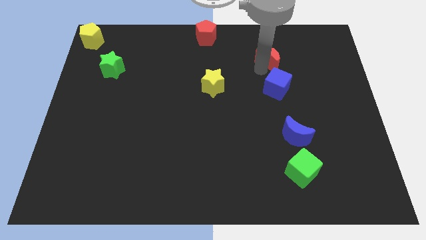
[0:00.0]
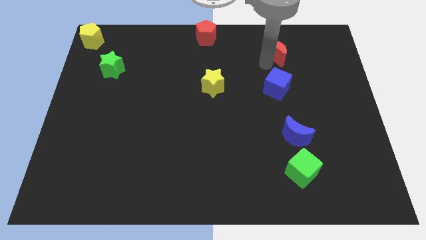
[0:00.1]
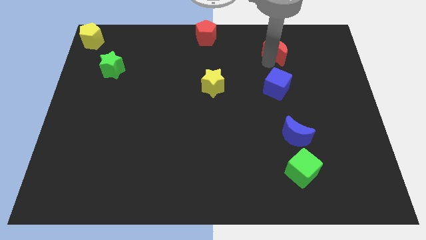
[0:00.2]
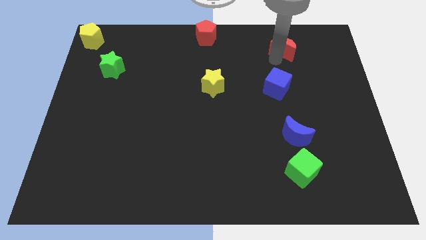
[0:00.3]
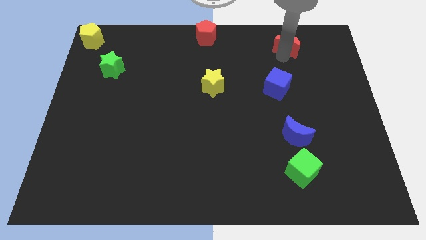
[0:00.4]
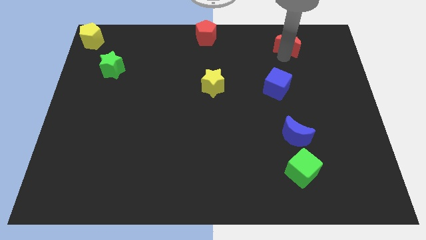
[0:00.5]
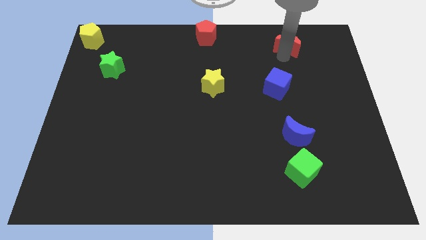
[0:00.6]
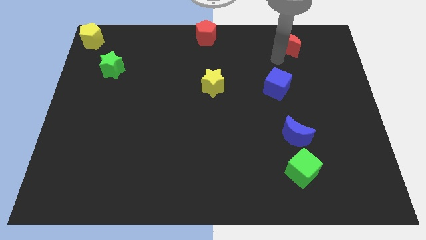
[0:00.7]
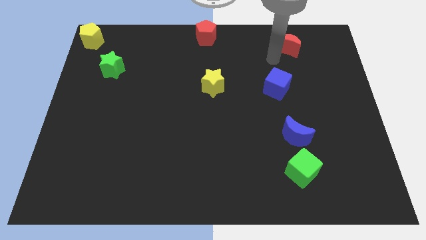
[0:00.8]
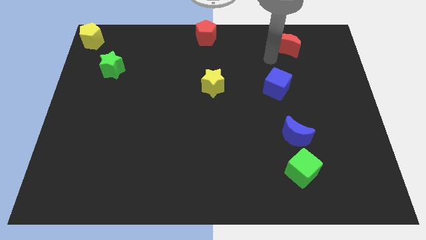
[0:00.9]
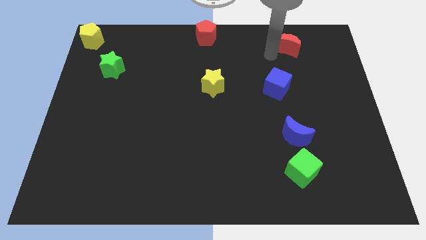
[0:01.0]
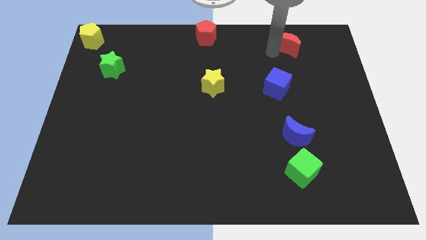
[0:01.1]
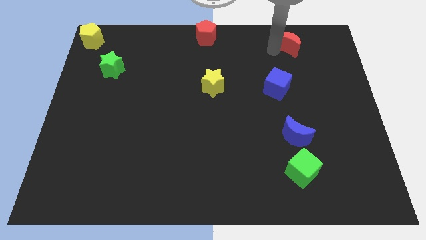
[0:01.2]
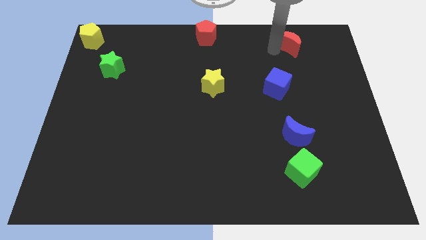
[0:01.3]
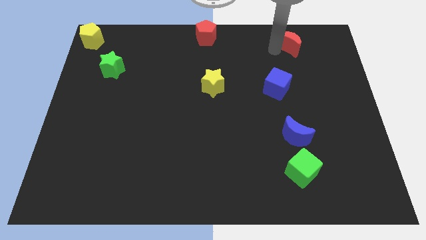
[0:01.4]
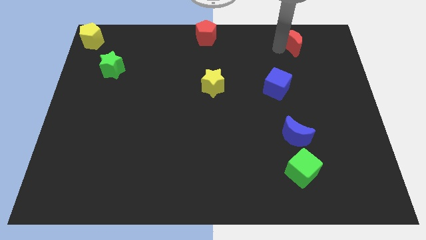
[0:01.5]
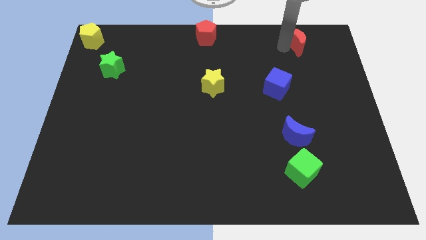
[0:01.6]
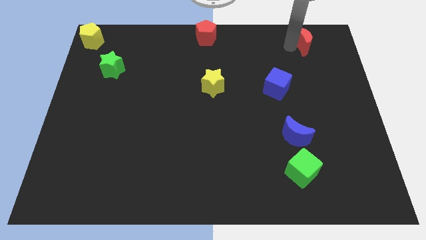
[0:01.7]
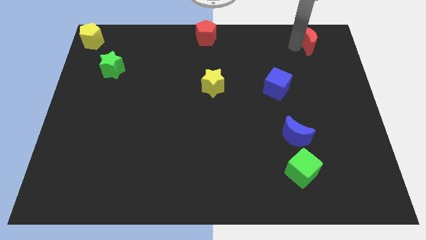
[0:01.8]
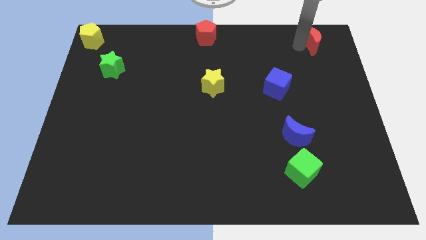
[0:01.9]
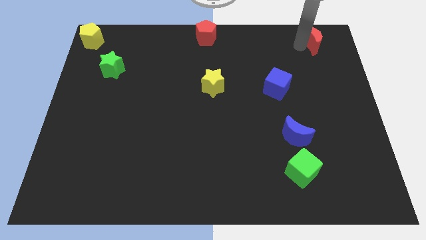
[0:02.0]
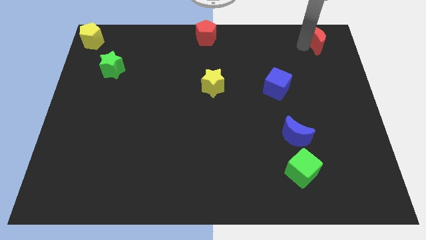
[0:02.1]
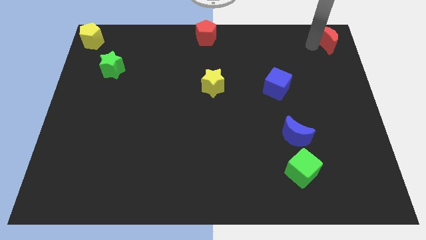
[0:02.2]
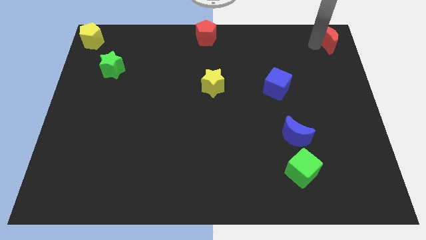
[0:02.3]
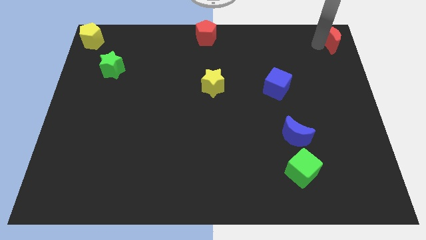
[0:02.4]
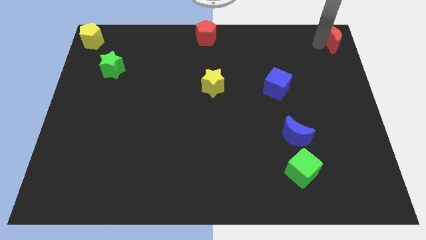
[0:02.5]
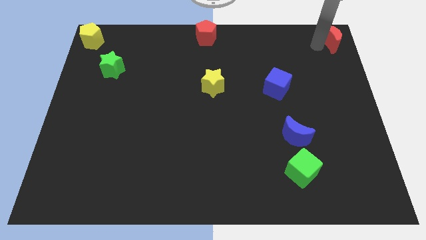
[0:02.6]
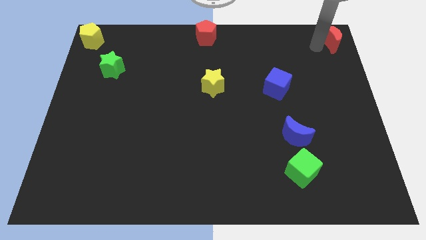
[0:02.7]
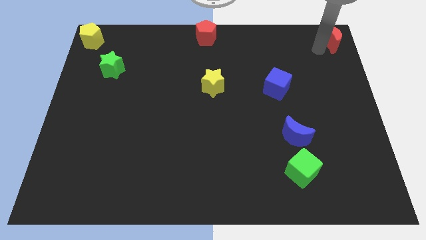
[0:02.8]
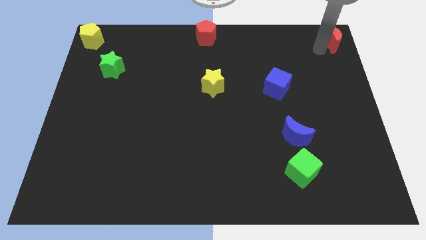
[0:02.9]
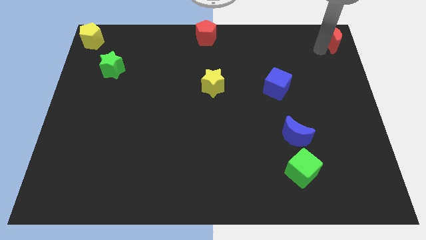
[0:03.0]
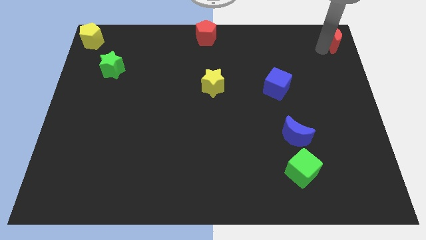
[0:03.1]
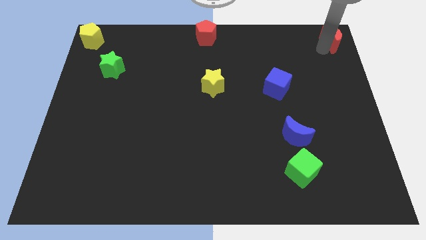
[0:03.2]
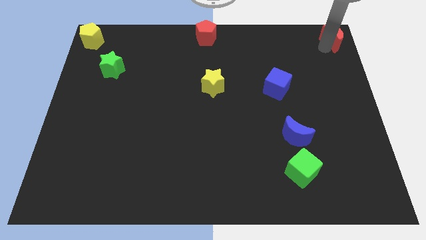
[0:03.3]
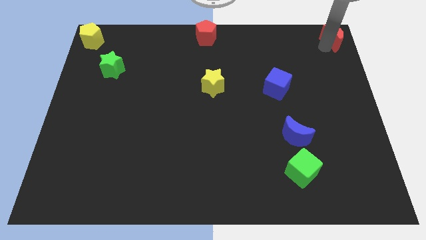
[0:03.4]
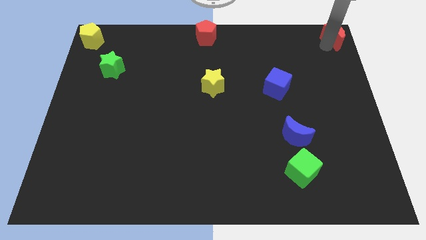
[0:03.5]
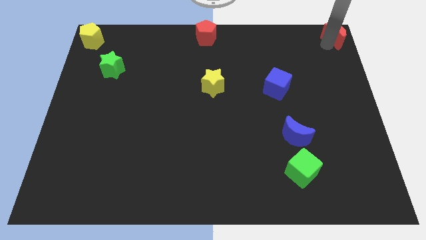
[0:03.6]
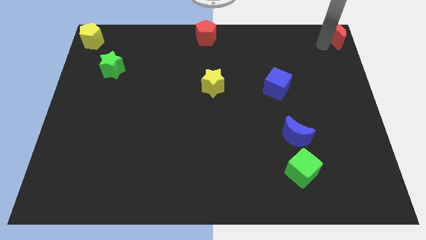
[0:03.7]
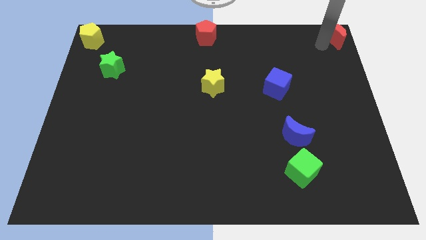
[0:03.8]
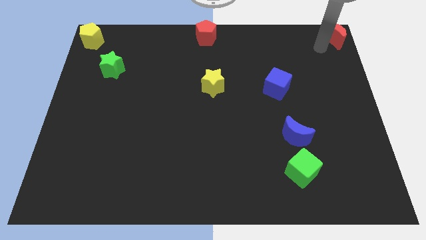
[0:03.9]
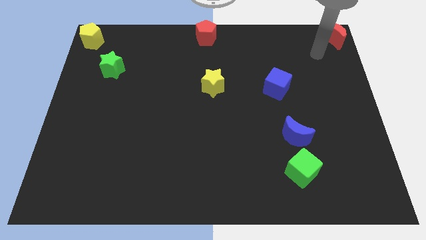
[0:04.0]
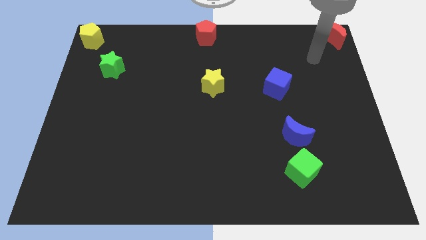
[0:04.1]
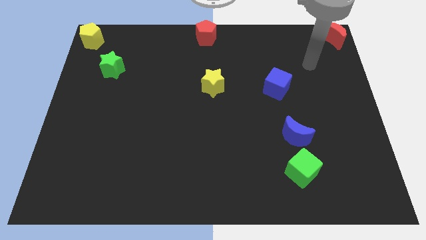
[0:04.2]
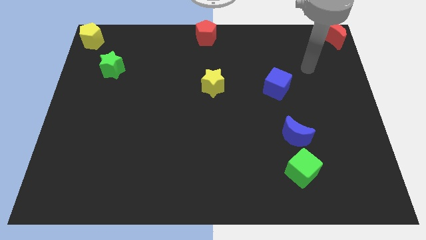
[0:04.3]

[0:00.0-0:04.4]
place the red moon to the top right of the board

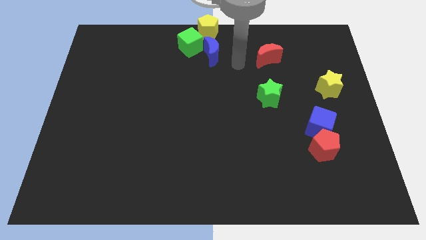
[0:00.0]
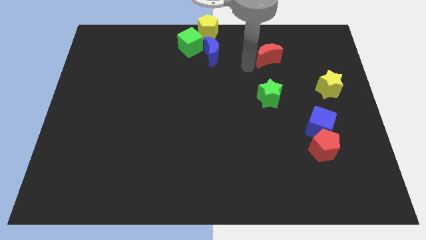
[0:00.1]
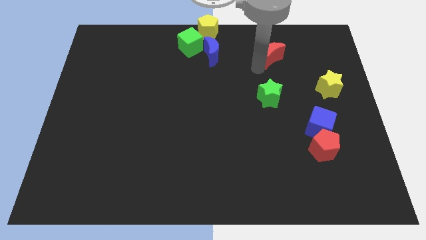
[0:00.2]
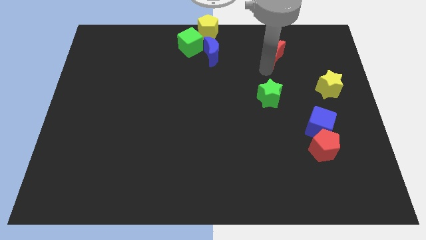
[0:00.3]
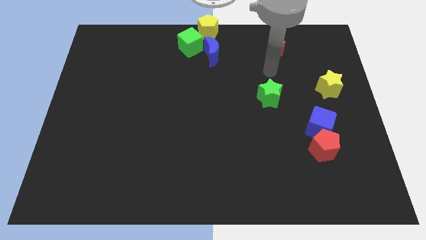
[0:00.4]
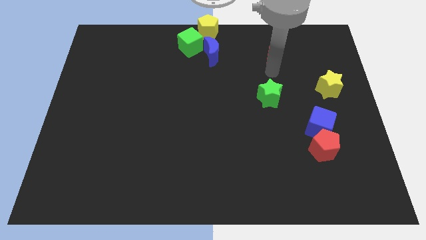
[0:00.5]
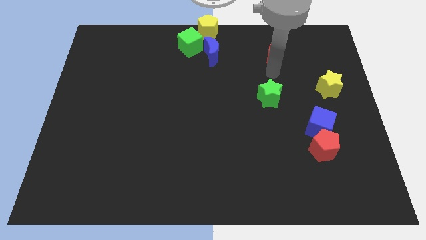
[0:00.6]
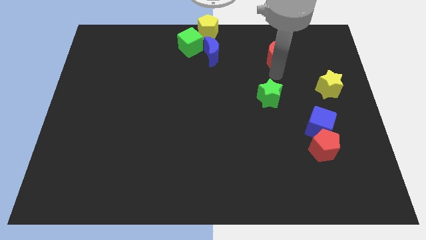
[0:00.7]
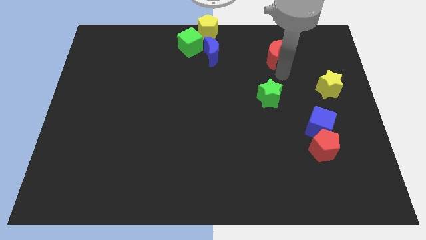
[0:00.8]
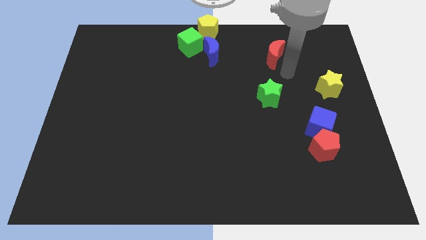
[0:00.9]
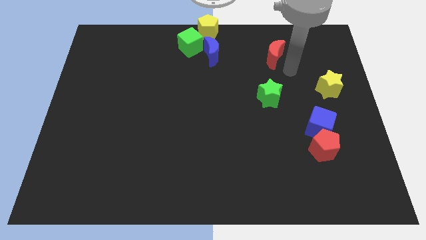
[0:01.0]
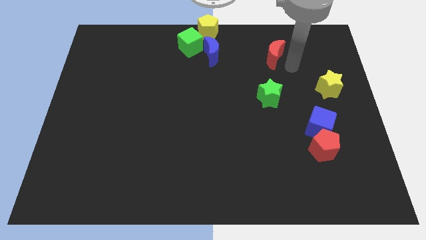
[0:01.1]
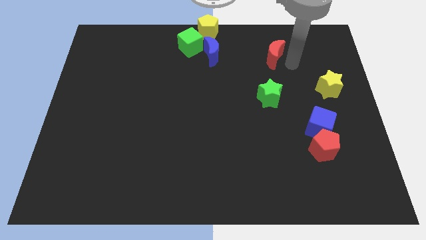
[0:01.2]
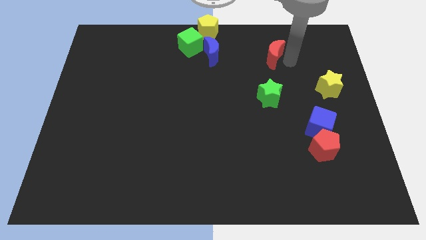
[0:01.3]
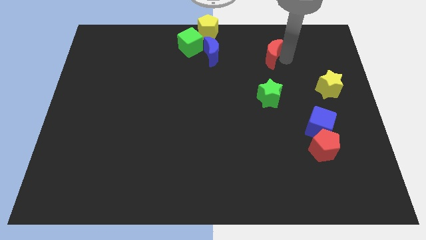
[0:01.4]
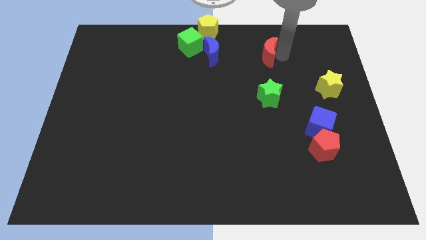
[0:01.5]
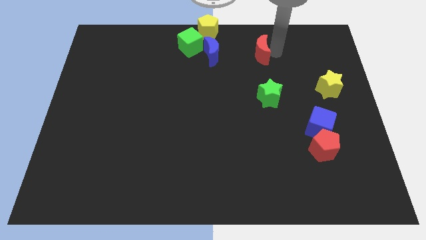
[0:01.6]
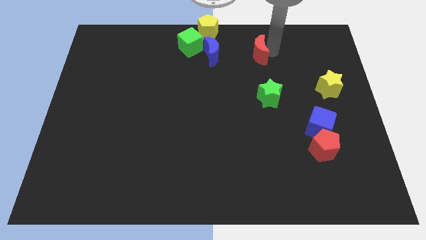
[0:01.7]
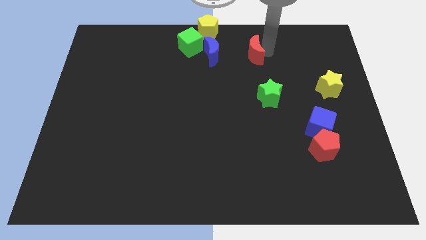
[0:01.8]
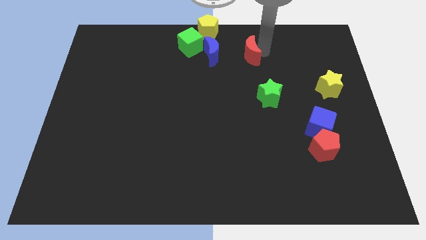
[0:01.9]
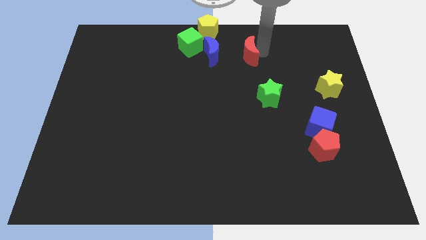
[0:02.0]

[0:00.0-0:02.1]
move the red moon towards the right side of the blue moon

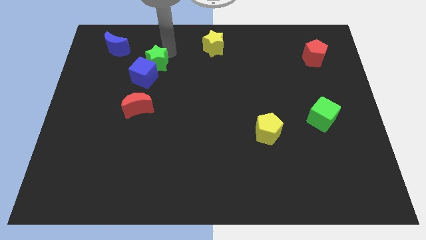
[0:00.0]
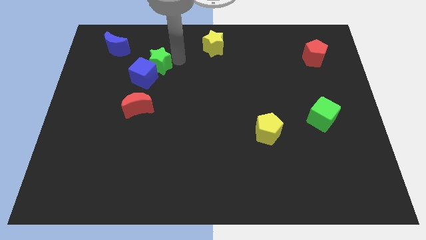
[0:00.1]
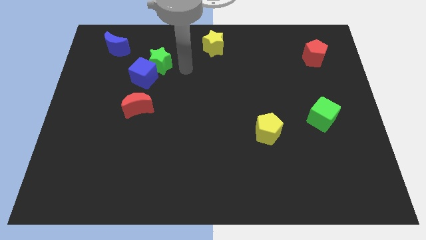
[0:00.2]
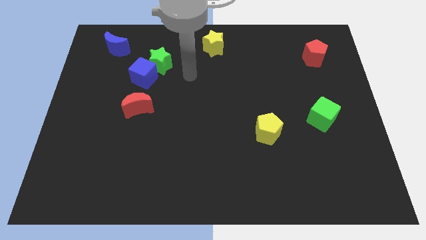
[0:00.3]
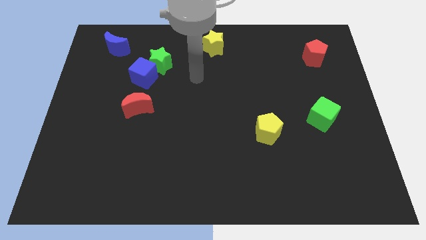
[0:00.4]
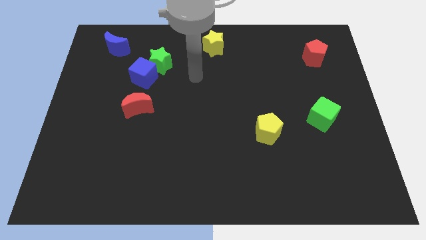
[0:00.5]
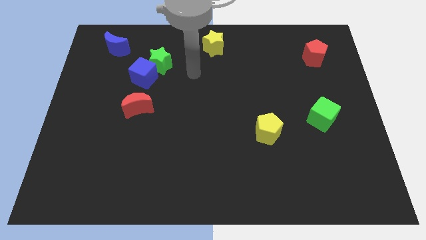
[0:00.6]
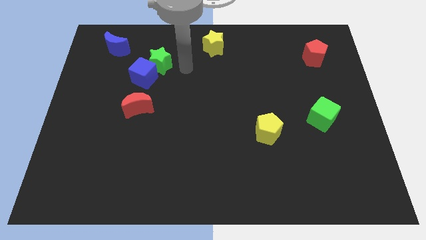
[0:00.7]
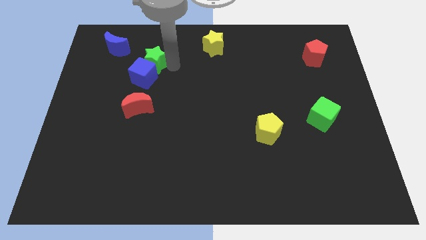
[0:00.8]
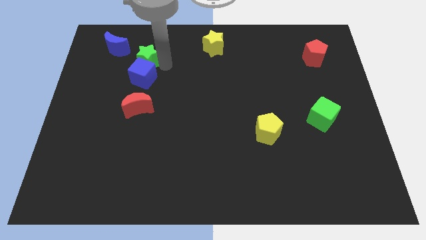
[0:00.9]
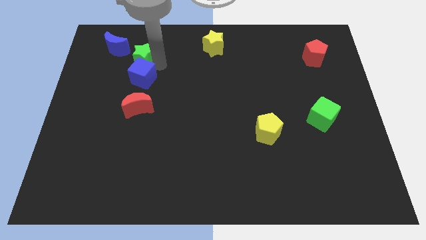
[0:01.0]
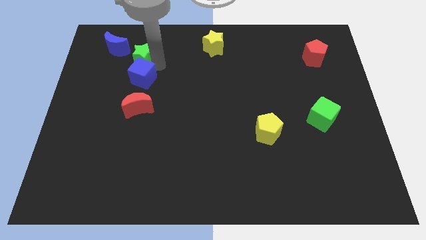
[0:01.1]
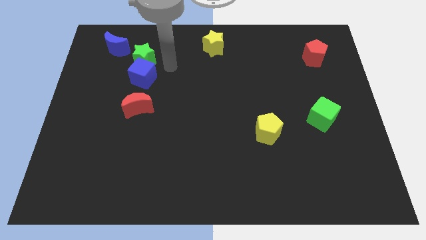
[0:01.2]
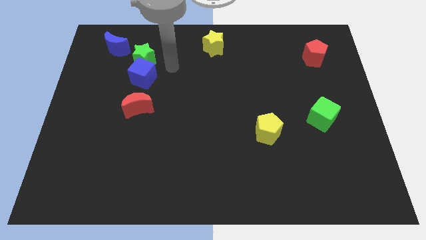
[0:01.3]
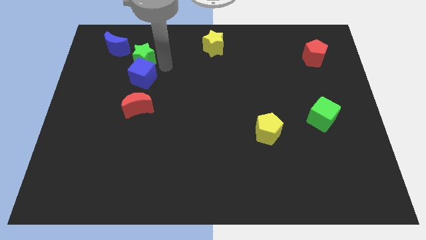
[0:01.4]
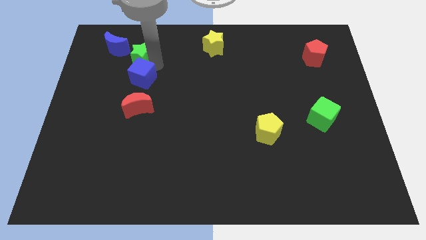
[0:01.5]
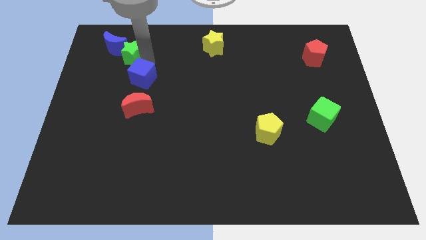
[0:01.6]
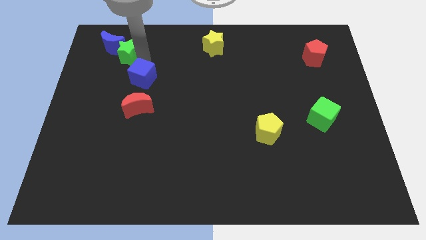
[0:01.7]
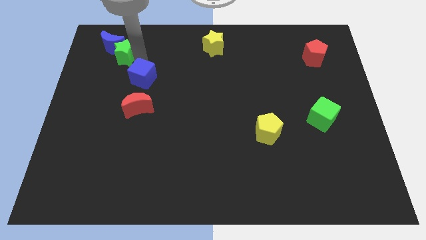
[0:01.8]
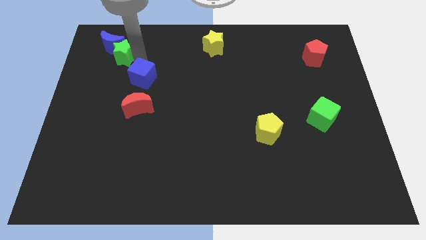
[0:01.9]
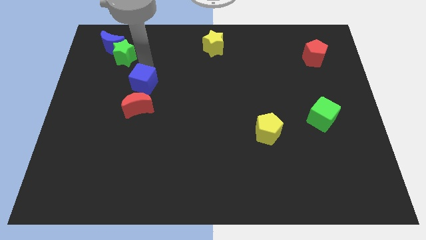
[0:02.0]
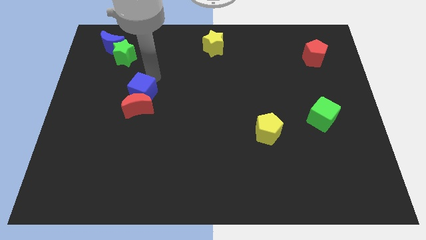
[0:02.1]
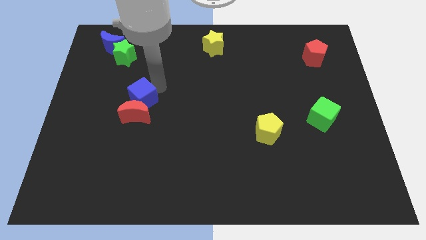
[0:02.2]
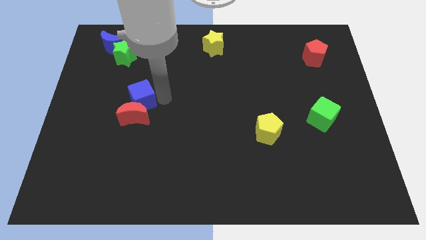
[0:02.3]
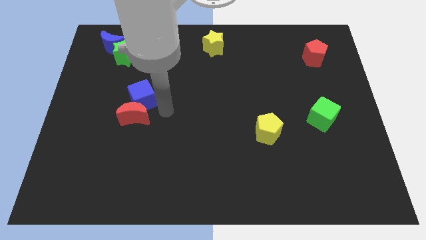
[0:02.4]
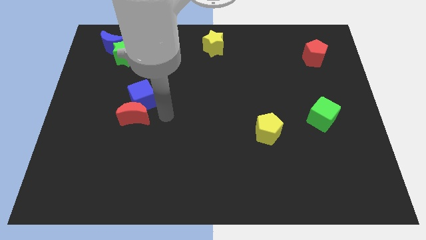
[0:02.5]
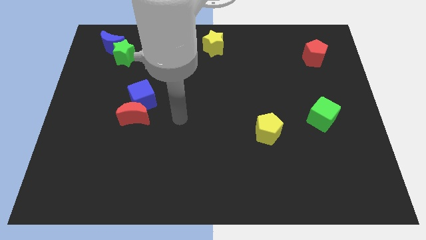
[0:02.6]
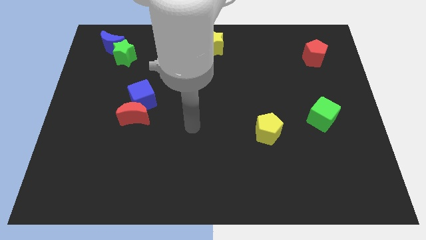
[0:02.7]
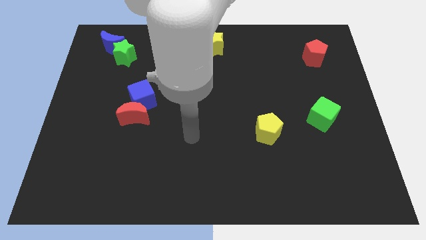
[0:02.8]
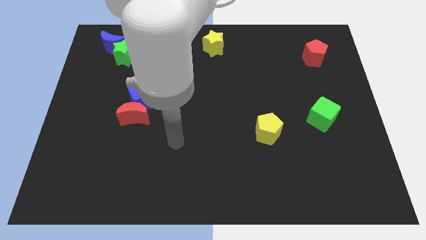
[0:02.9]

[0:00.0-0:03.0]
place green star to the bottom right of blue moon
